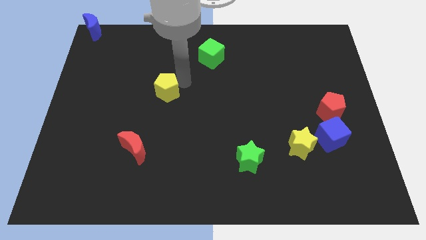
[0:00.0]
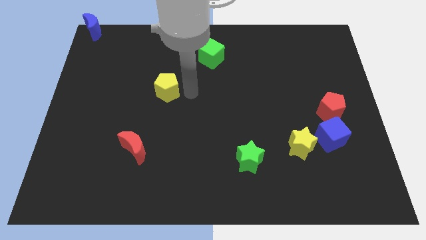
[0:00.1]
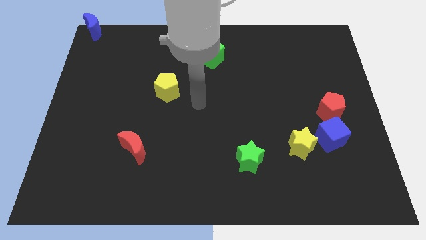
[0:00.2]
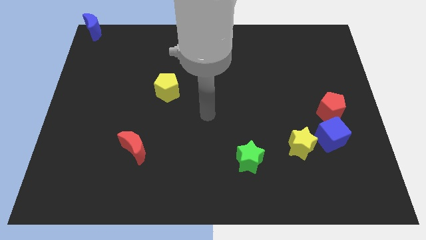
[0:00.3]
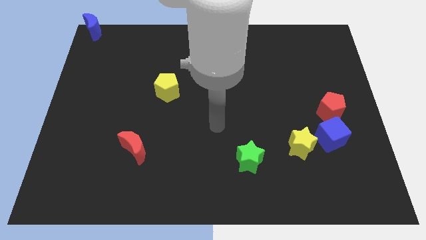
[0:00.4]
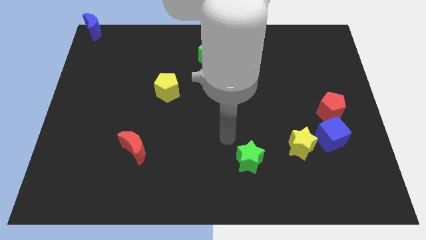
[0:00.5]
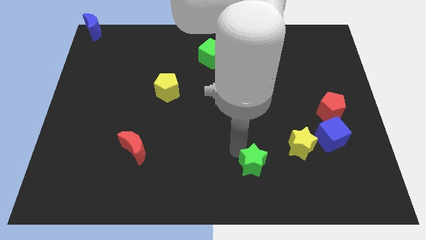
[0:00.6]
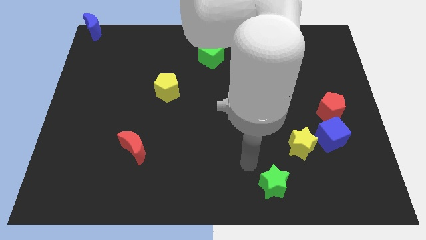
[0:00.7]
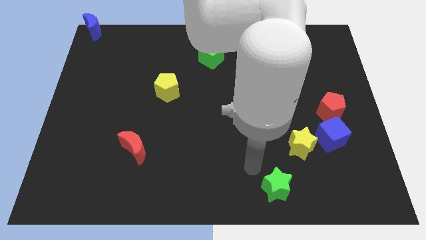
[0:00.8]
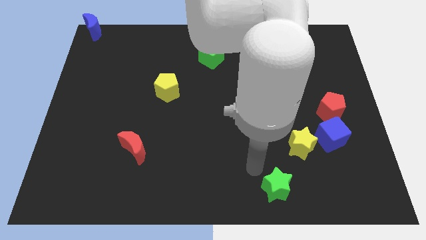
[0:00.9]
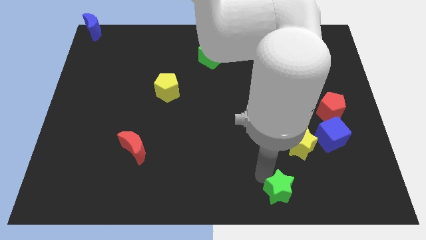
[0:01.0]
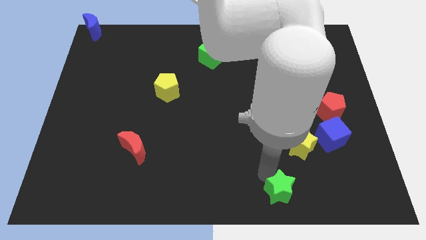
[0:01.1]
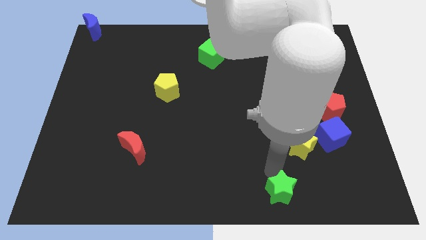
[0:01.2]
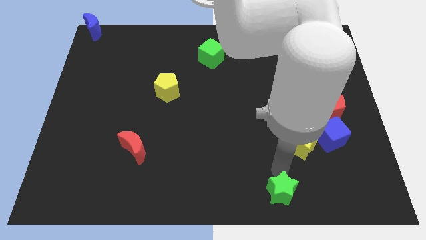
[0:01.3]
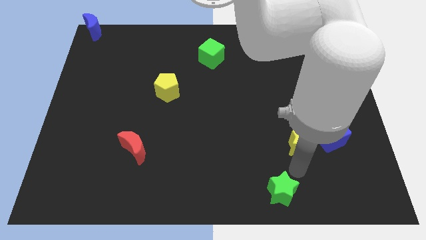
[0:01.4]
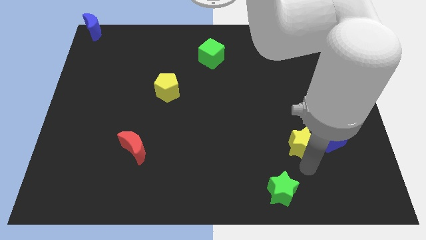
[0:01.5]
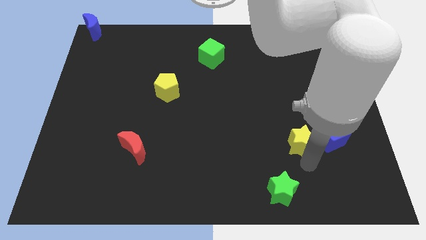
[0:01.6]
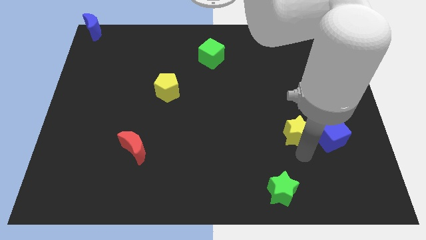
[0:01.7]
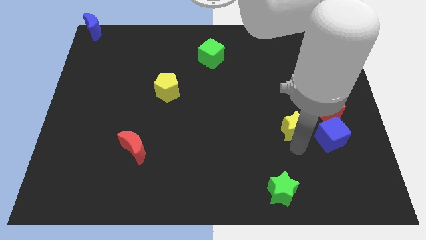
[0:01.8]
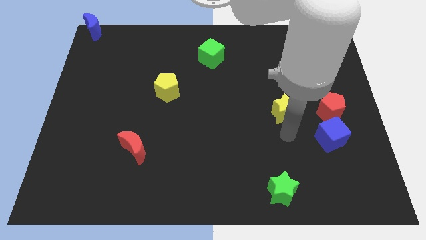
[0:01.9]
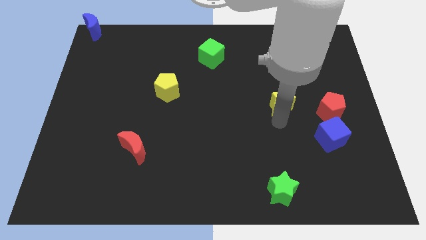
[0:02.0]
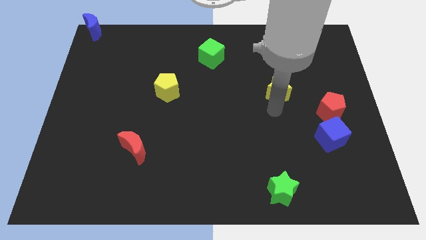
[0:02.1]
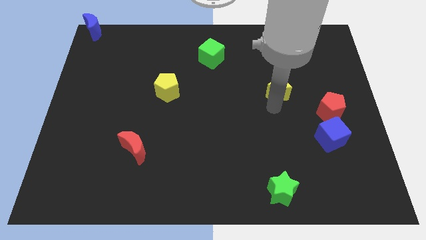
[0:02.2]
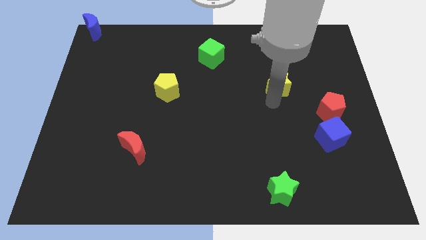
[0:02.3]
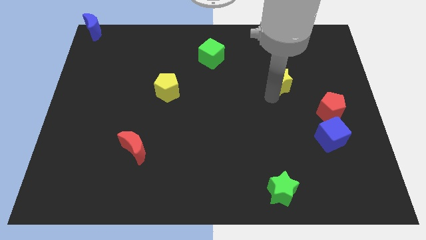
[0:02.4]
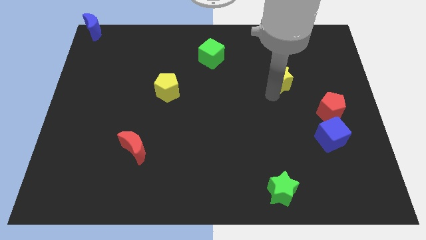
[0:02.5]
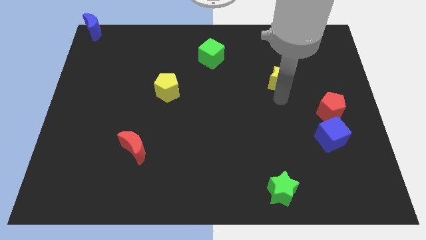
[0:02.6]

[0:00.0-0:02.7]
pull the yellow star slightly up

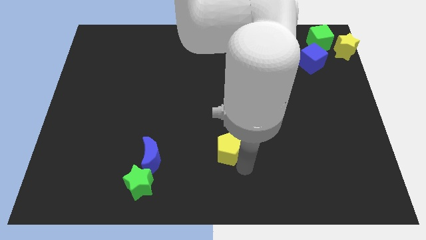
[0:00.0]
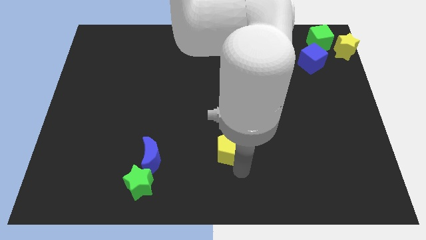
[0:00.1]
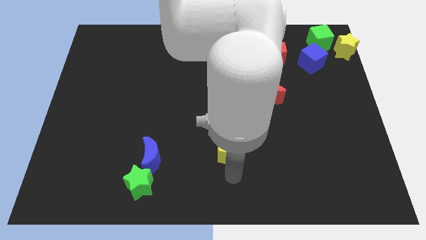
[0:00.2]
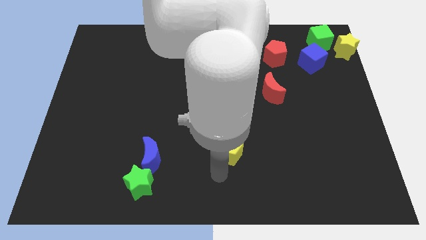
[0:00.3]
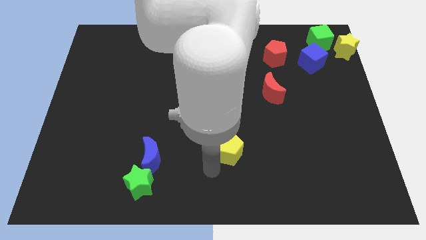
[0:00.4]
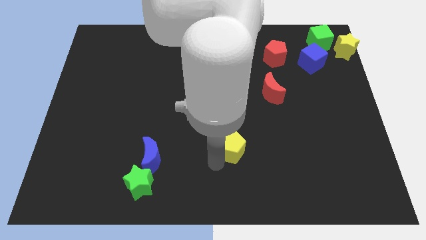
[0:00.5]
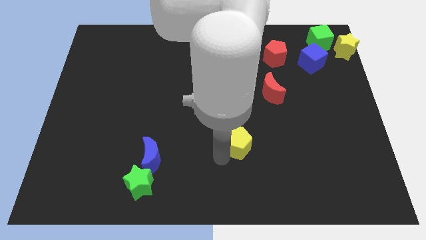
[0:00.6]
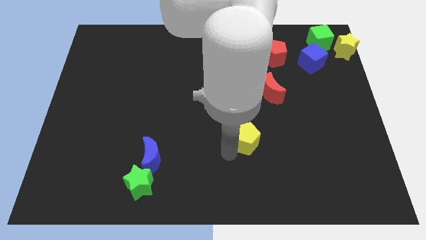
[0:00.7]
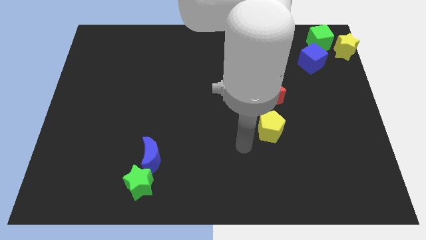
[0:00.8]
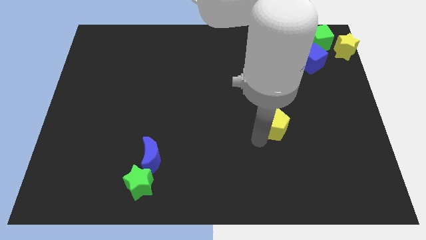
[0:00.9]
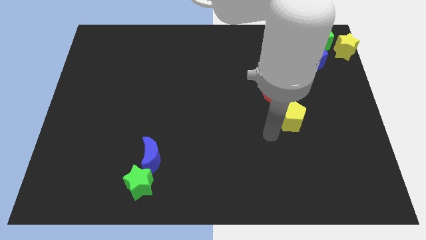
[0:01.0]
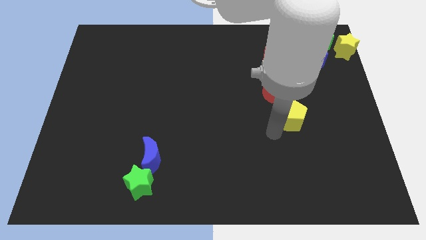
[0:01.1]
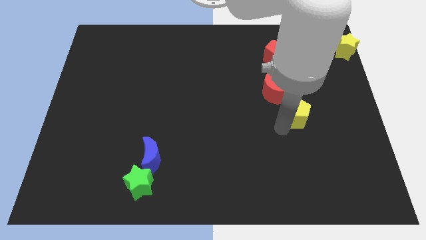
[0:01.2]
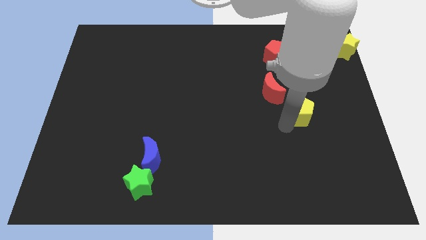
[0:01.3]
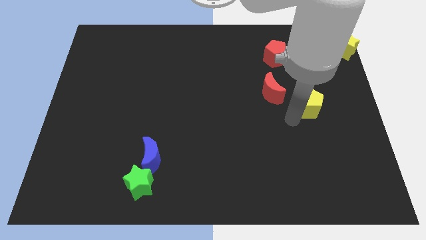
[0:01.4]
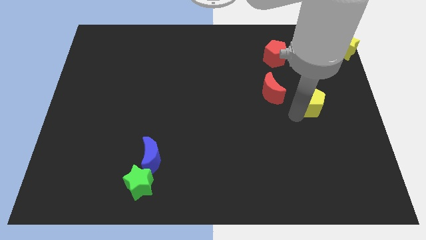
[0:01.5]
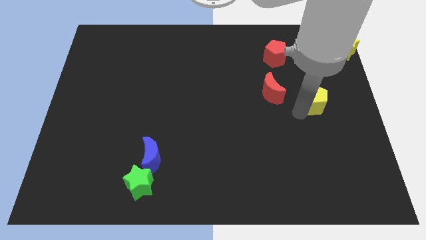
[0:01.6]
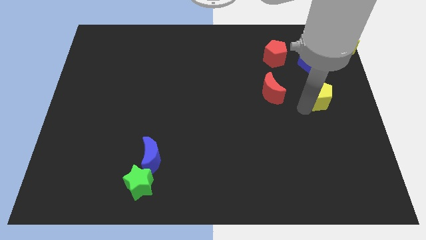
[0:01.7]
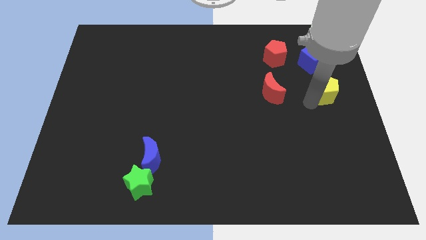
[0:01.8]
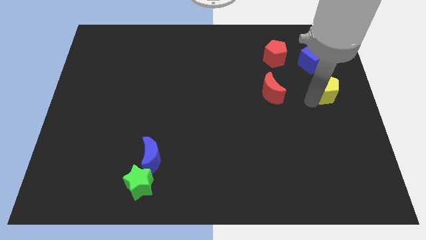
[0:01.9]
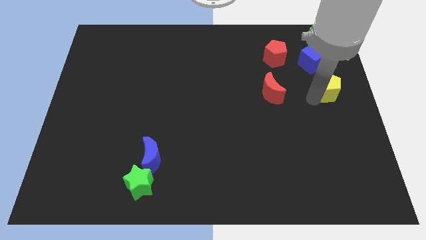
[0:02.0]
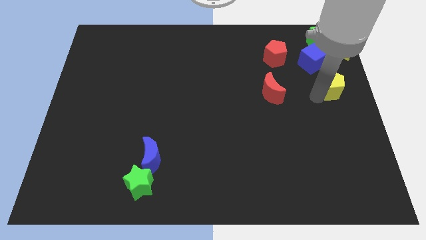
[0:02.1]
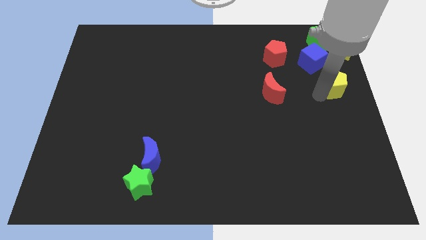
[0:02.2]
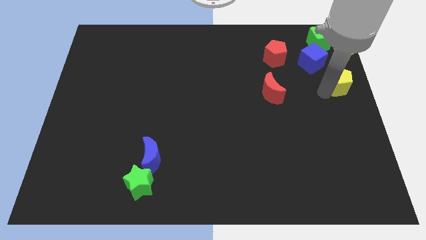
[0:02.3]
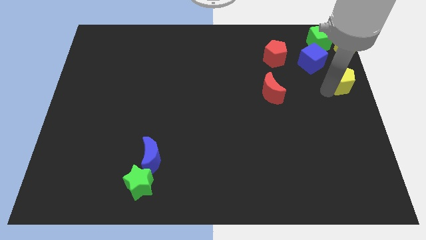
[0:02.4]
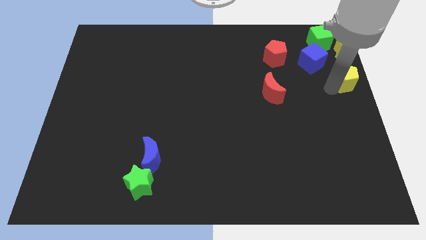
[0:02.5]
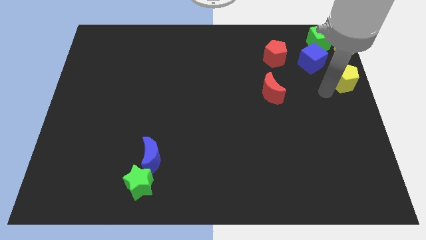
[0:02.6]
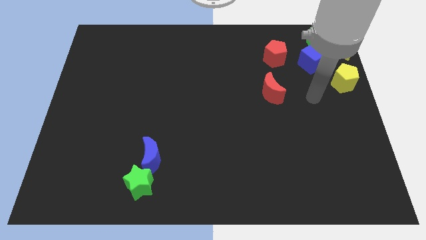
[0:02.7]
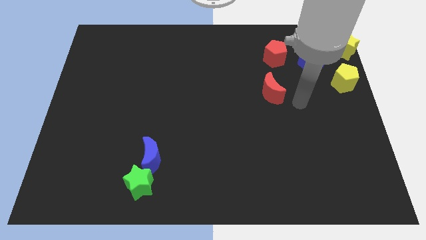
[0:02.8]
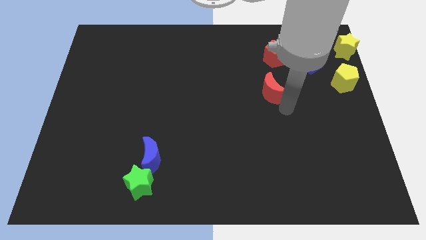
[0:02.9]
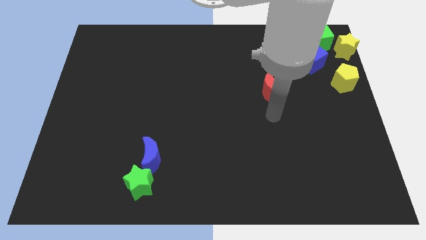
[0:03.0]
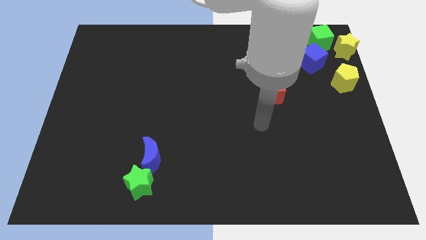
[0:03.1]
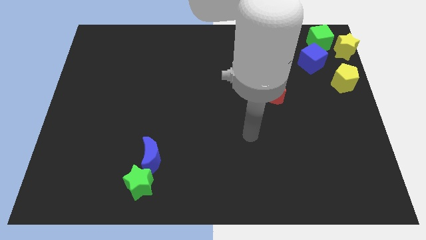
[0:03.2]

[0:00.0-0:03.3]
place the yellow pentagon below to the yellow star

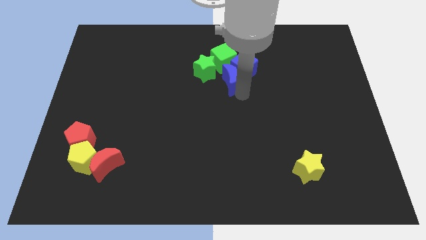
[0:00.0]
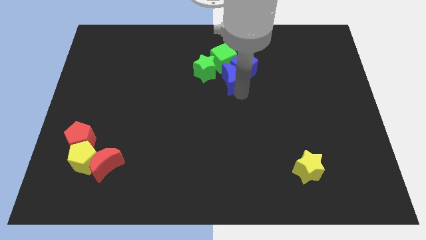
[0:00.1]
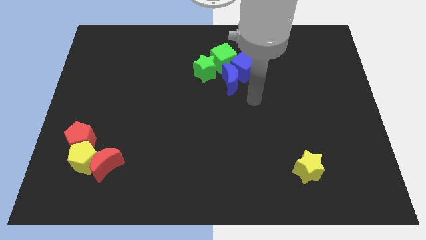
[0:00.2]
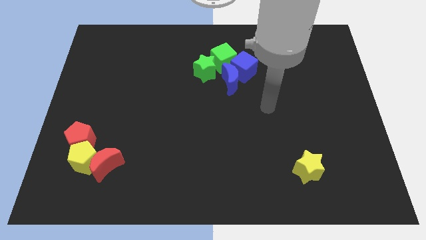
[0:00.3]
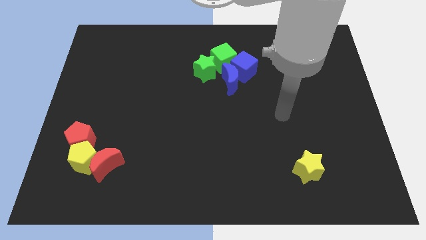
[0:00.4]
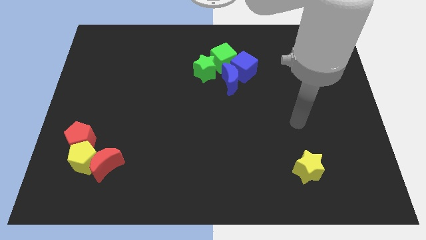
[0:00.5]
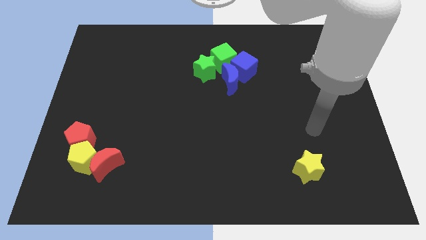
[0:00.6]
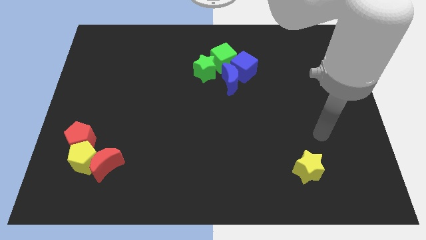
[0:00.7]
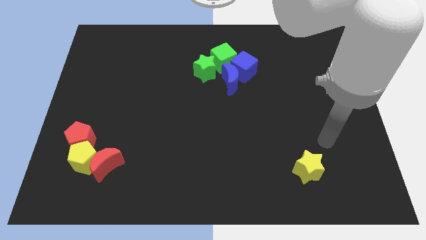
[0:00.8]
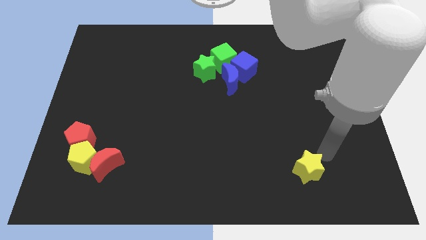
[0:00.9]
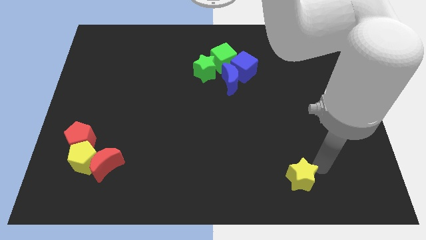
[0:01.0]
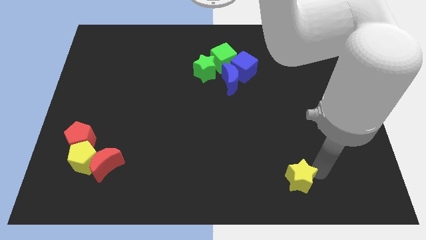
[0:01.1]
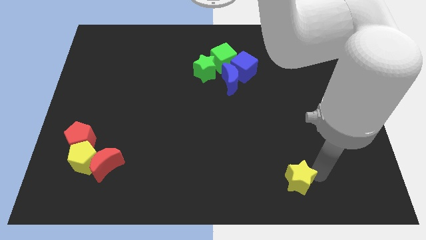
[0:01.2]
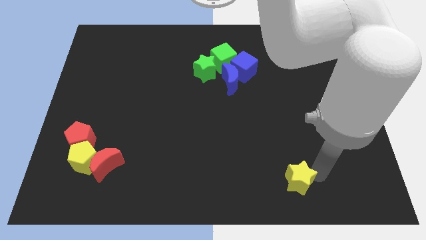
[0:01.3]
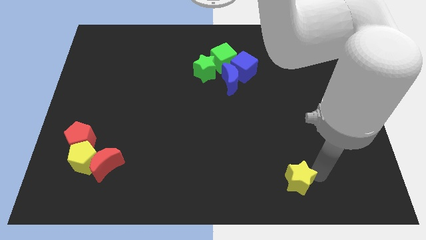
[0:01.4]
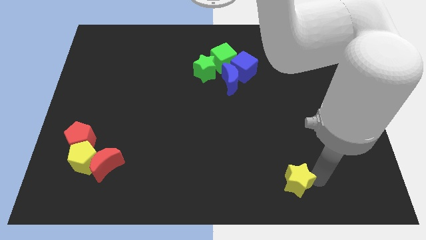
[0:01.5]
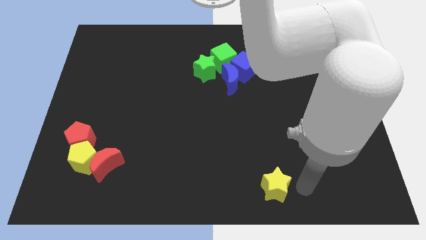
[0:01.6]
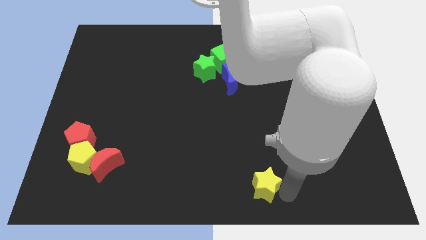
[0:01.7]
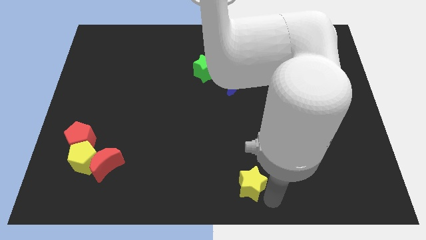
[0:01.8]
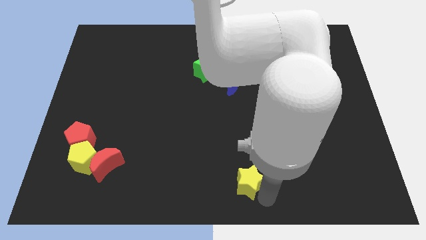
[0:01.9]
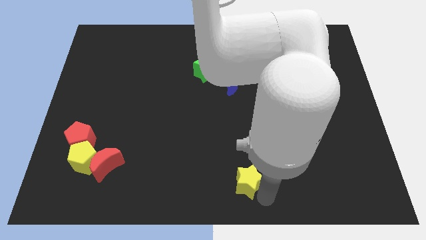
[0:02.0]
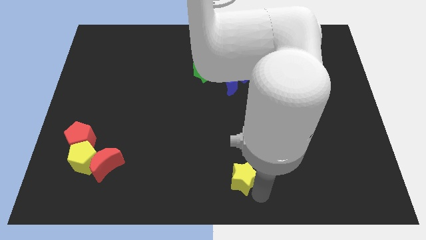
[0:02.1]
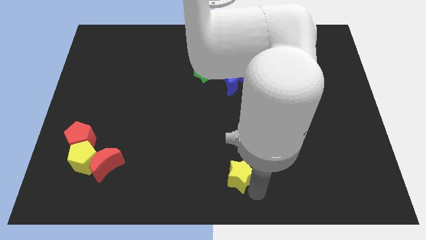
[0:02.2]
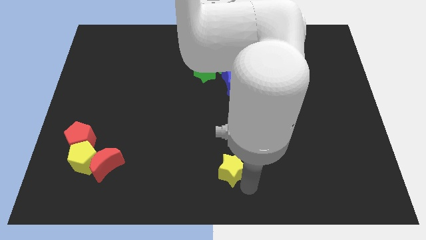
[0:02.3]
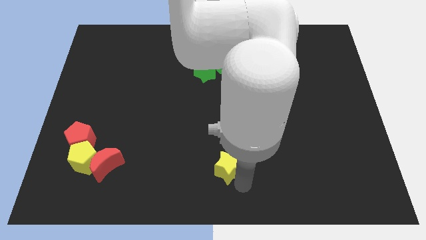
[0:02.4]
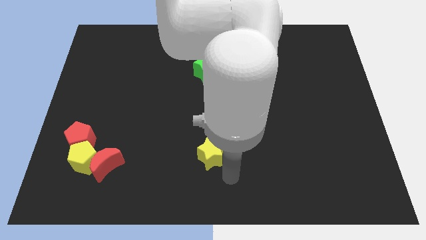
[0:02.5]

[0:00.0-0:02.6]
move the arm away from the blue blocks

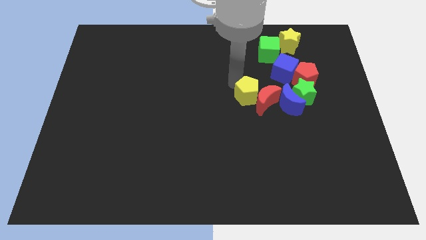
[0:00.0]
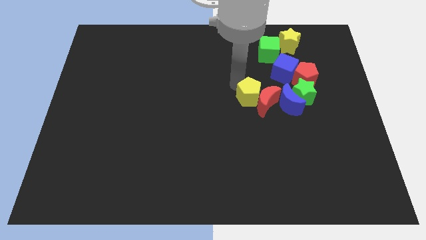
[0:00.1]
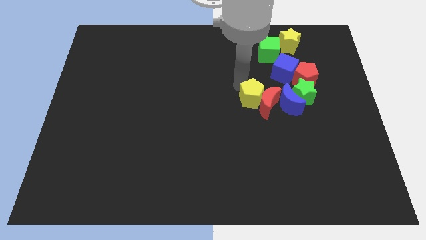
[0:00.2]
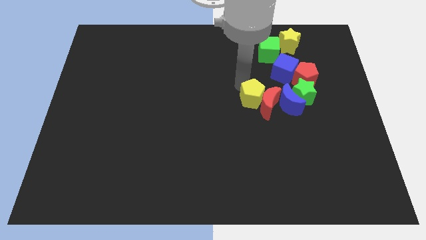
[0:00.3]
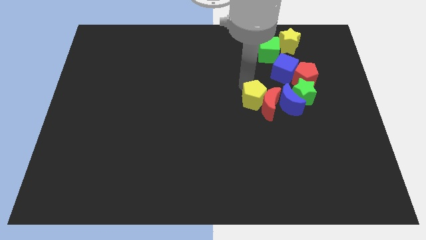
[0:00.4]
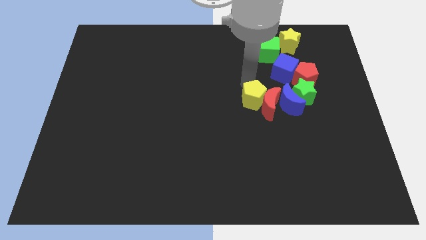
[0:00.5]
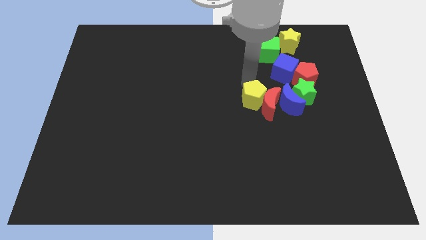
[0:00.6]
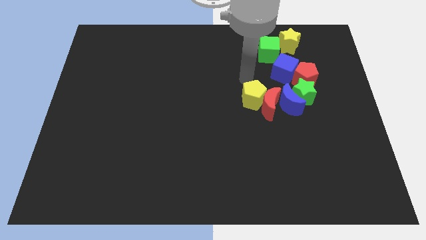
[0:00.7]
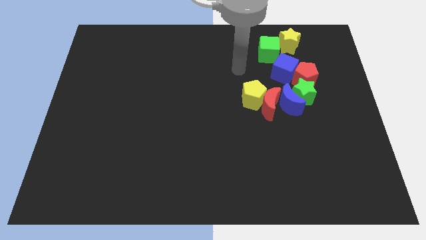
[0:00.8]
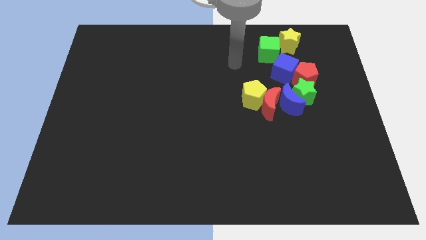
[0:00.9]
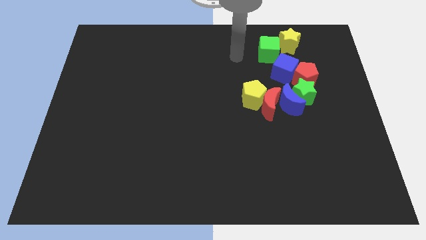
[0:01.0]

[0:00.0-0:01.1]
push the yellow pentagon into the red moon
